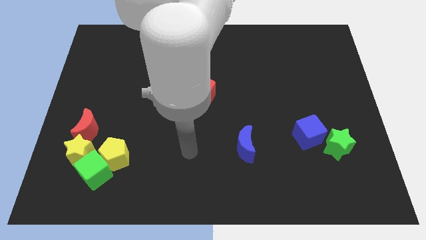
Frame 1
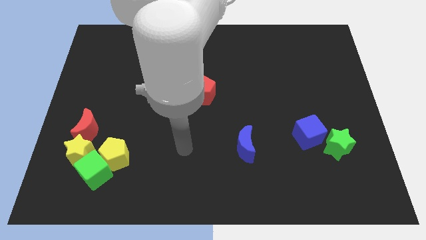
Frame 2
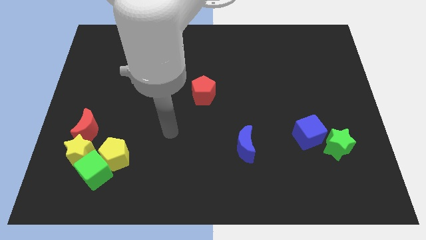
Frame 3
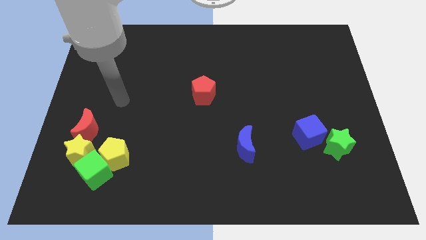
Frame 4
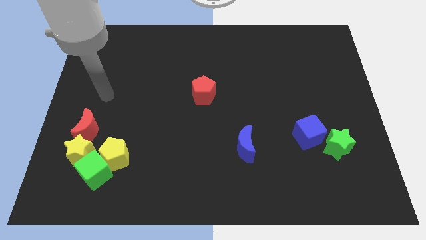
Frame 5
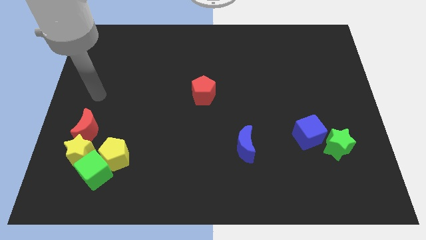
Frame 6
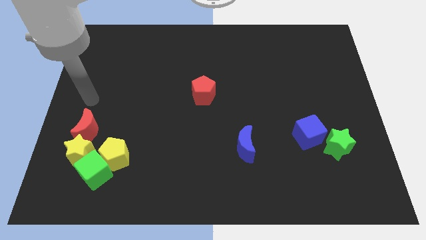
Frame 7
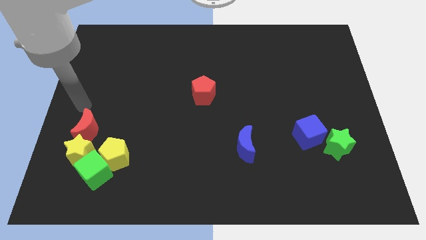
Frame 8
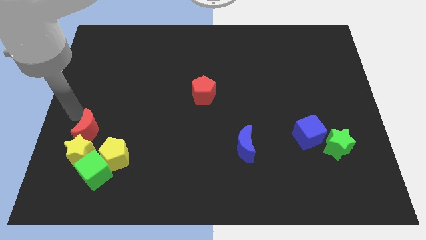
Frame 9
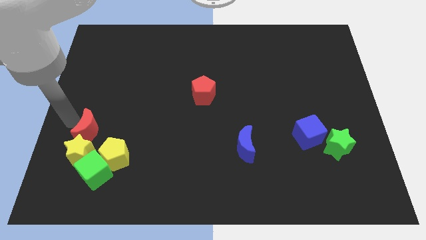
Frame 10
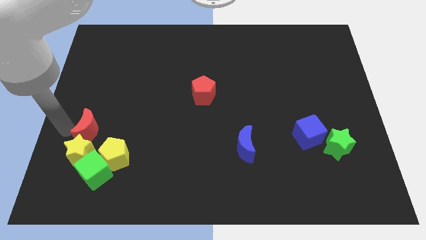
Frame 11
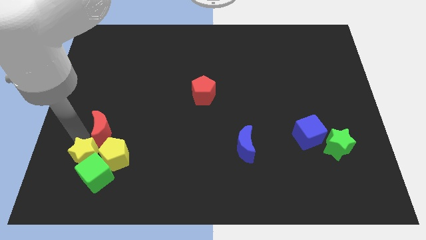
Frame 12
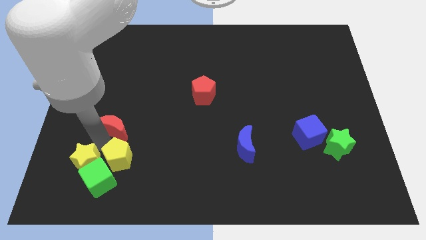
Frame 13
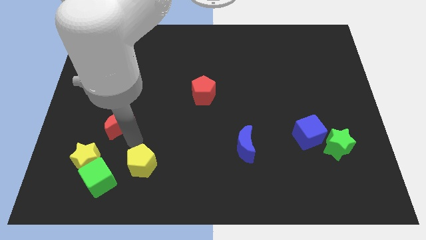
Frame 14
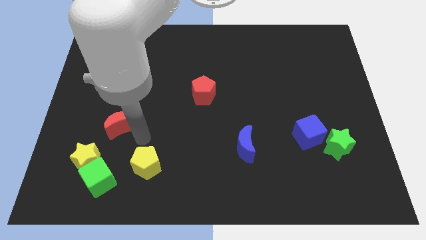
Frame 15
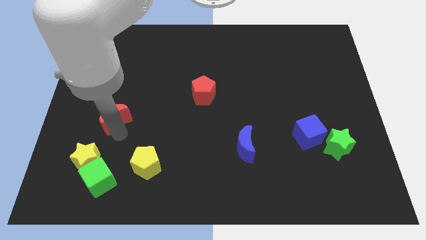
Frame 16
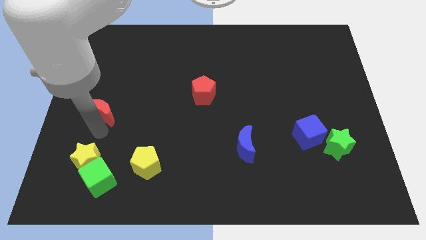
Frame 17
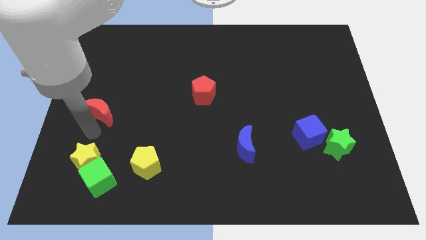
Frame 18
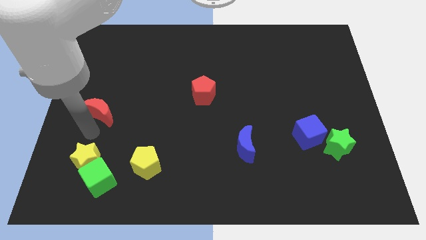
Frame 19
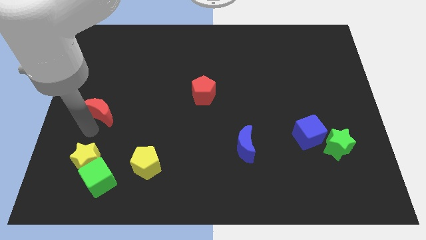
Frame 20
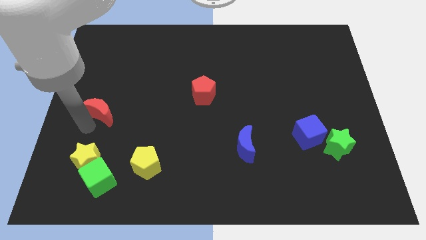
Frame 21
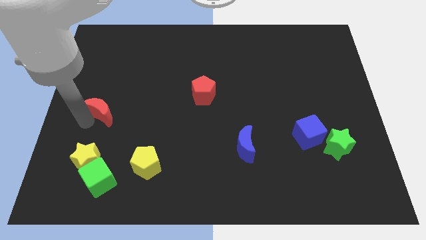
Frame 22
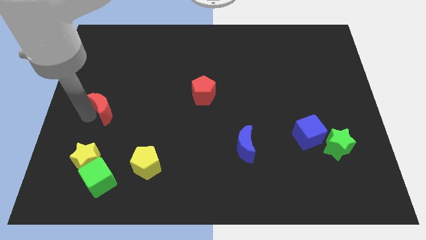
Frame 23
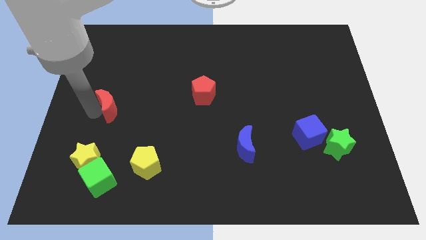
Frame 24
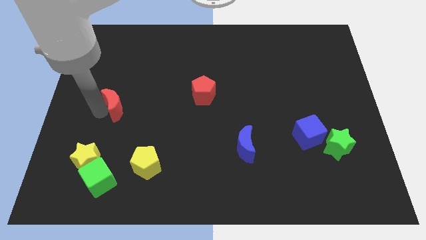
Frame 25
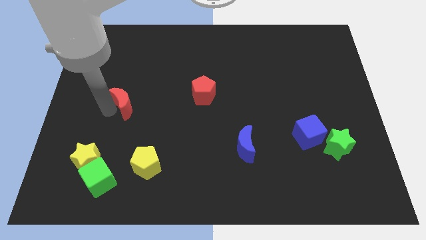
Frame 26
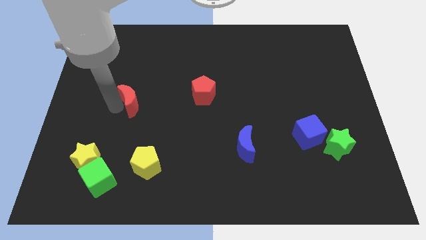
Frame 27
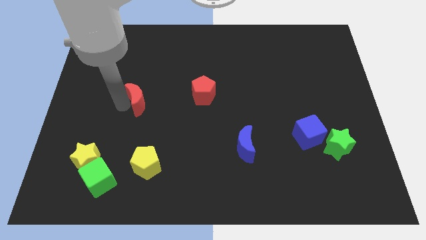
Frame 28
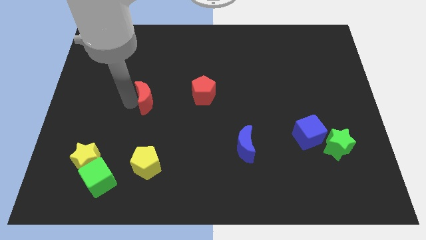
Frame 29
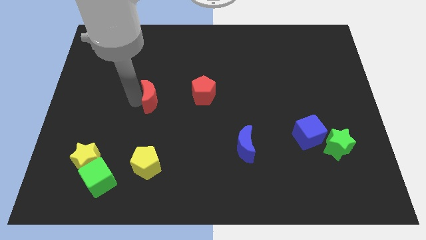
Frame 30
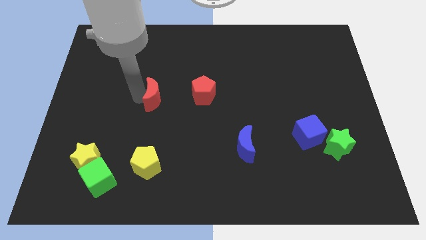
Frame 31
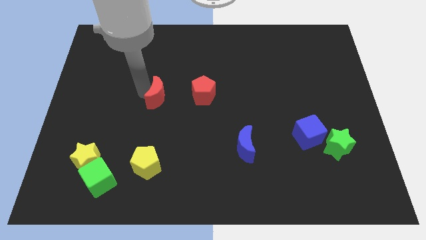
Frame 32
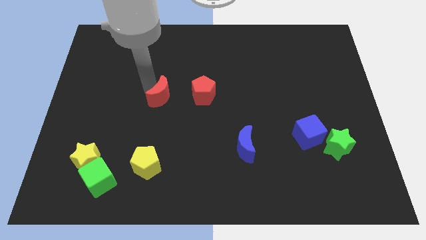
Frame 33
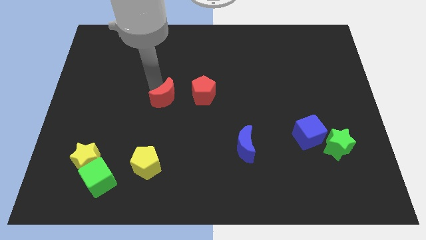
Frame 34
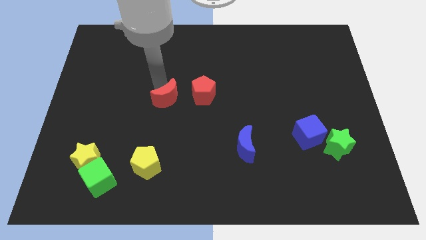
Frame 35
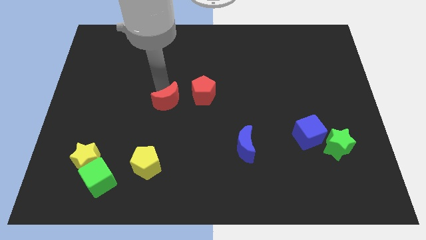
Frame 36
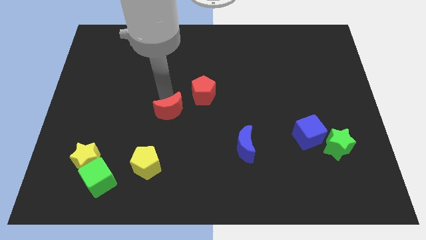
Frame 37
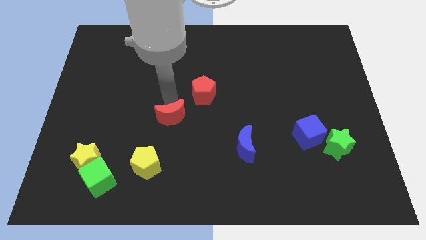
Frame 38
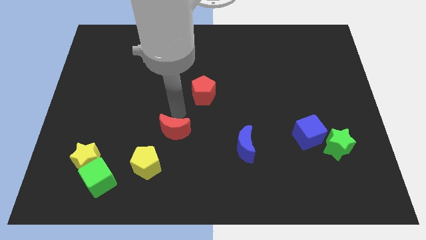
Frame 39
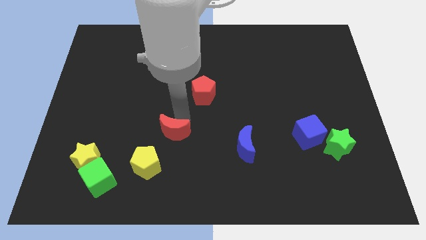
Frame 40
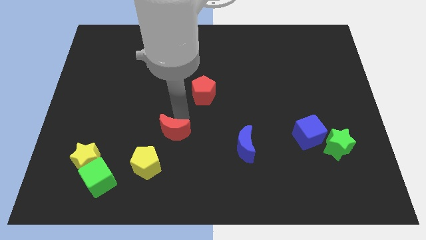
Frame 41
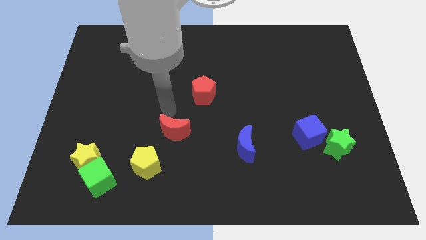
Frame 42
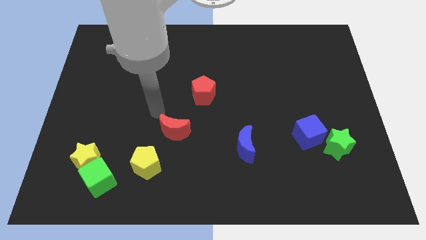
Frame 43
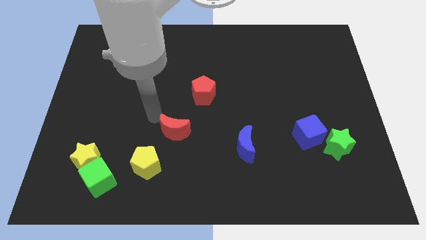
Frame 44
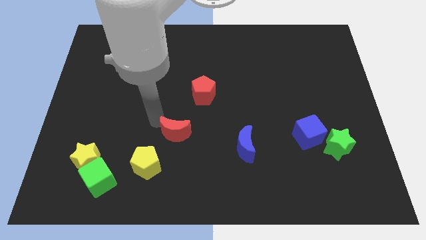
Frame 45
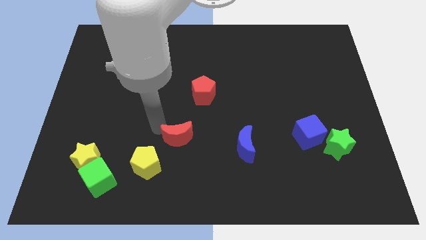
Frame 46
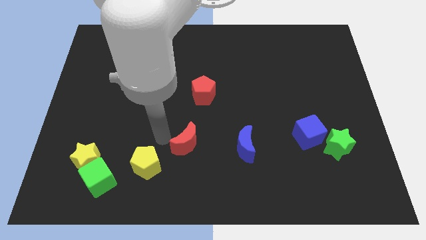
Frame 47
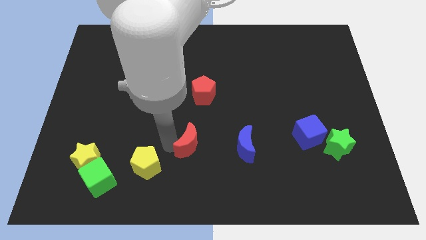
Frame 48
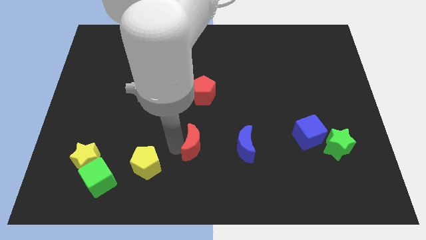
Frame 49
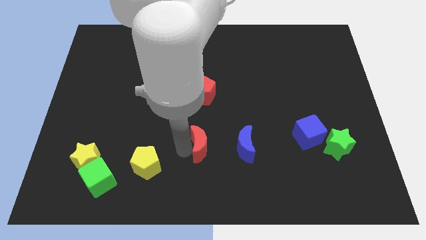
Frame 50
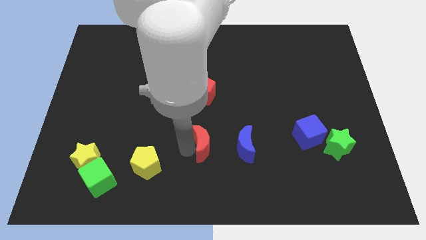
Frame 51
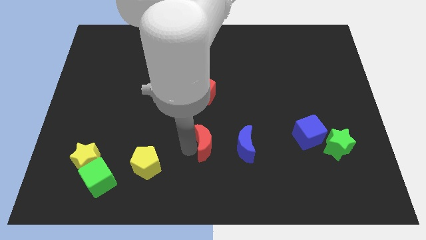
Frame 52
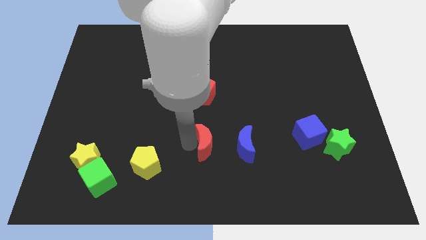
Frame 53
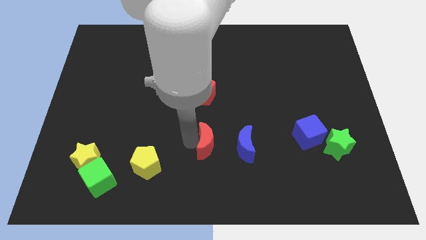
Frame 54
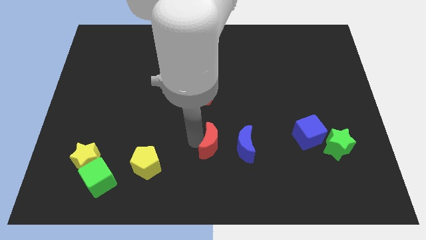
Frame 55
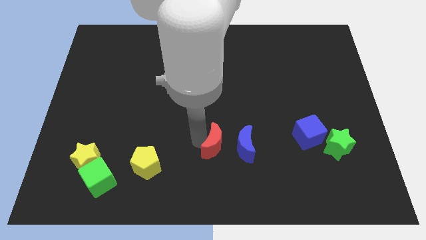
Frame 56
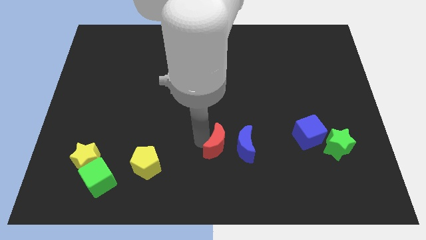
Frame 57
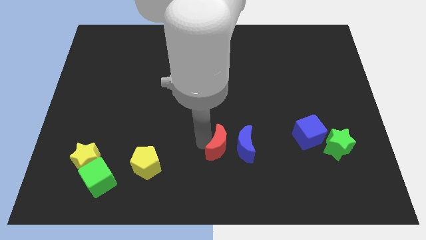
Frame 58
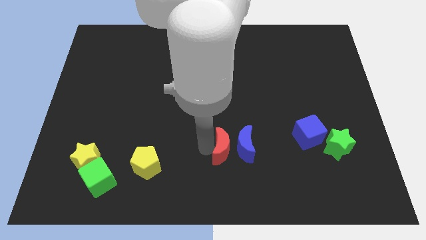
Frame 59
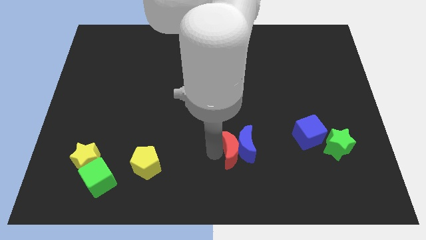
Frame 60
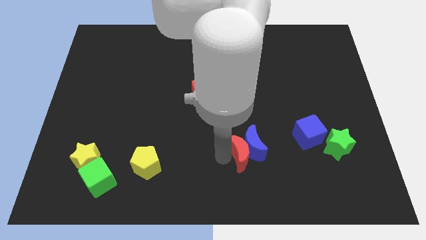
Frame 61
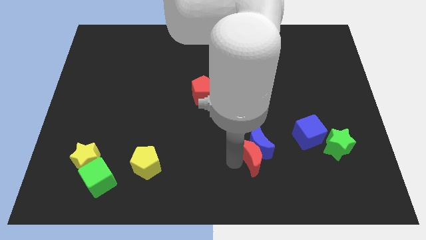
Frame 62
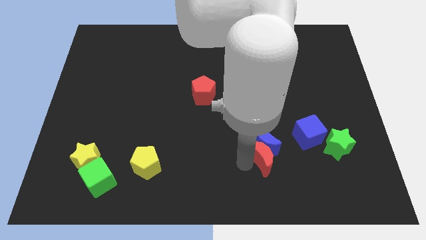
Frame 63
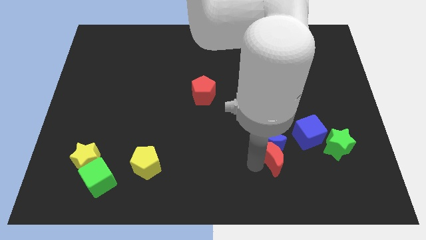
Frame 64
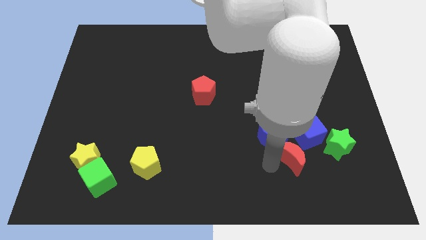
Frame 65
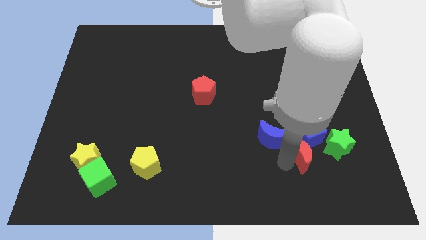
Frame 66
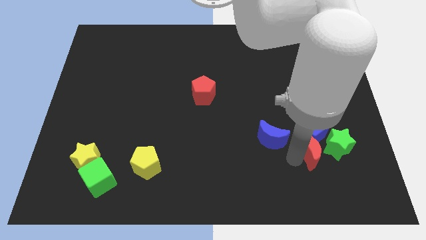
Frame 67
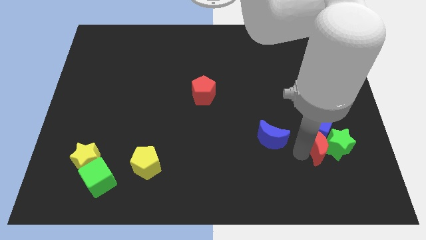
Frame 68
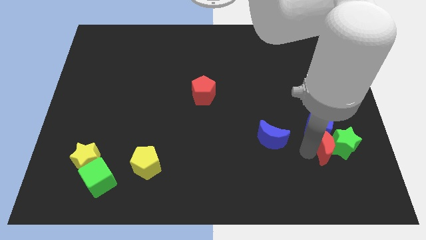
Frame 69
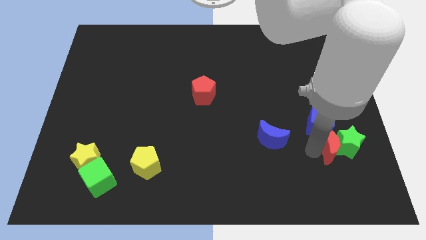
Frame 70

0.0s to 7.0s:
push the red moon close to the green star

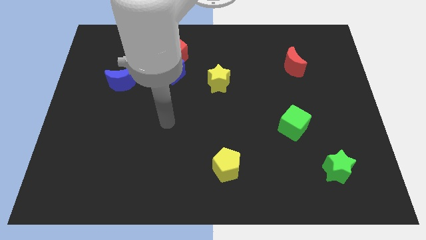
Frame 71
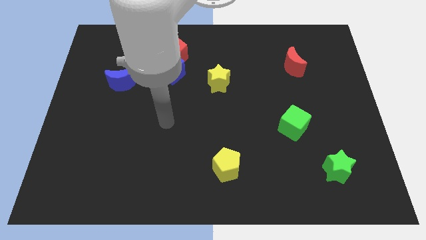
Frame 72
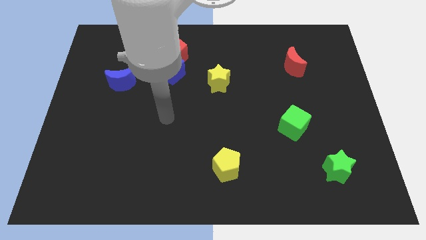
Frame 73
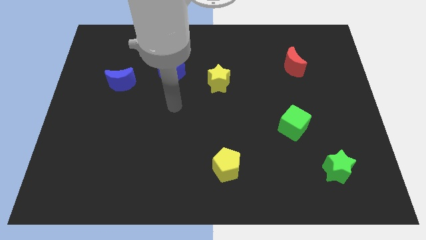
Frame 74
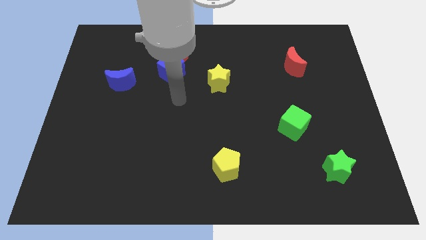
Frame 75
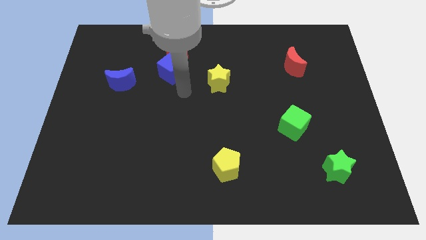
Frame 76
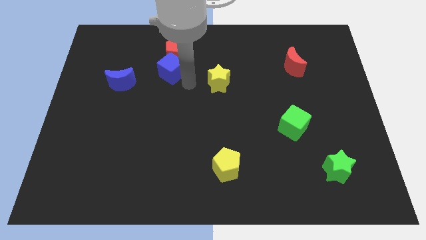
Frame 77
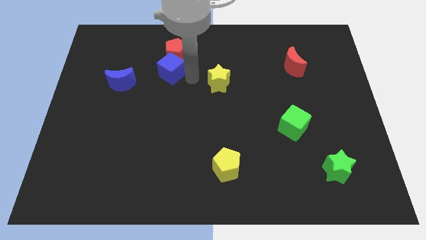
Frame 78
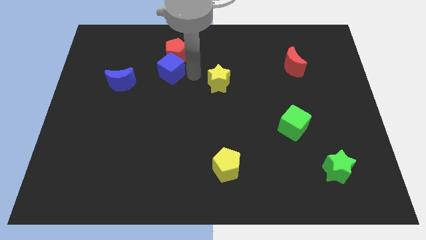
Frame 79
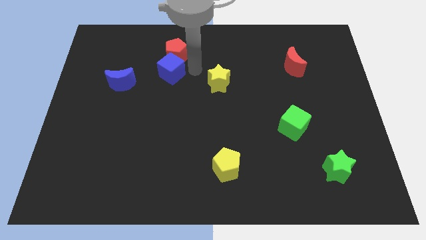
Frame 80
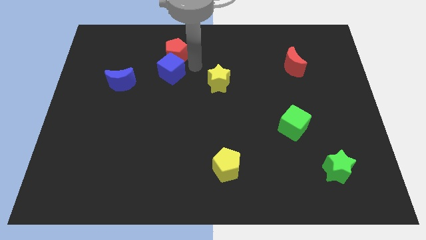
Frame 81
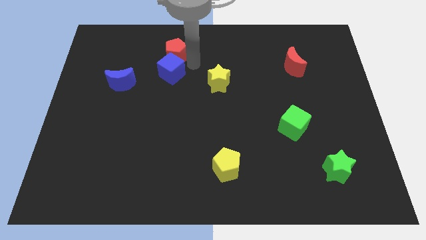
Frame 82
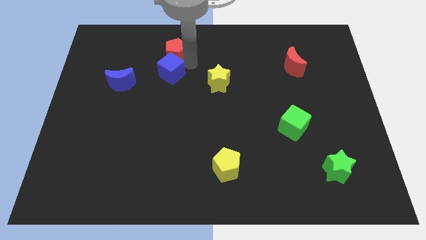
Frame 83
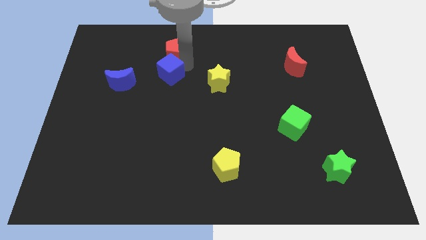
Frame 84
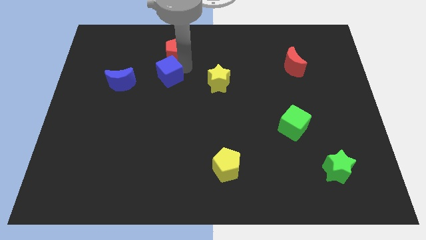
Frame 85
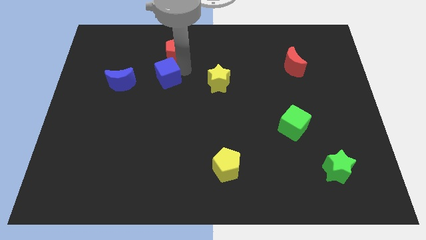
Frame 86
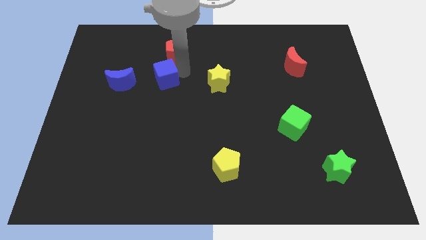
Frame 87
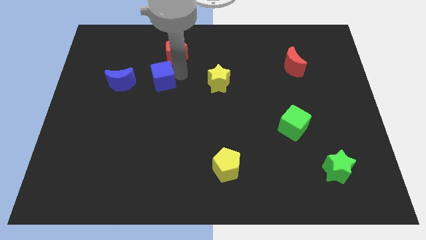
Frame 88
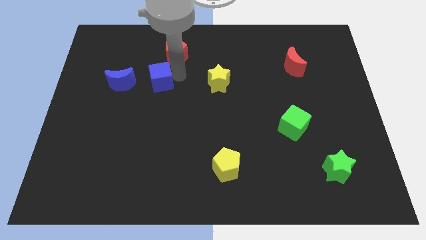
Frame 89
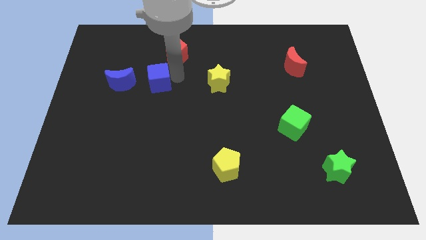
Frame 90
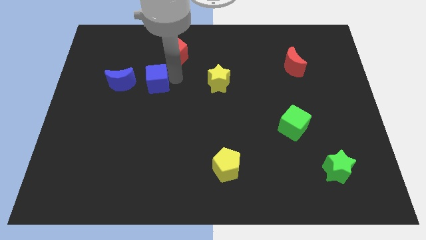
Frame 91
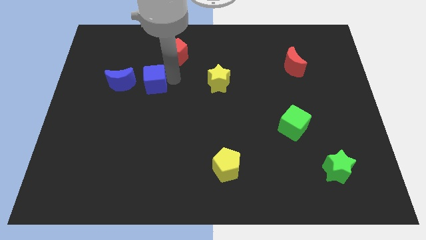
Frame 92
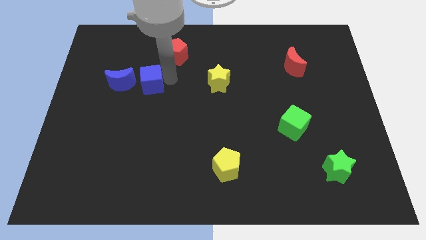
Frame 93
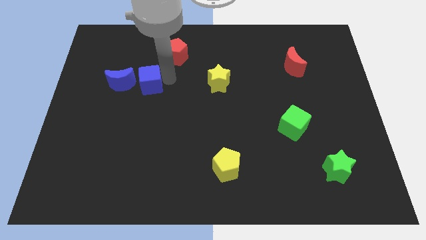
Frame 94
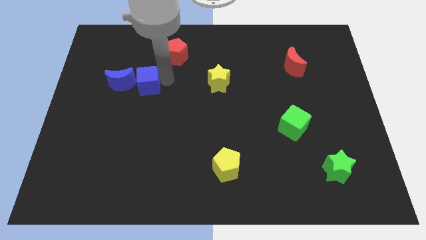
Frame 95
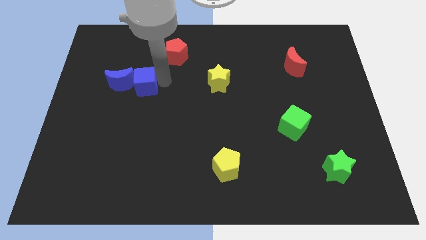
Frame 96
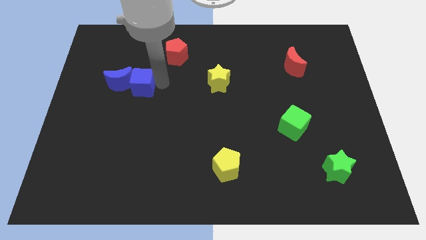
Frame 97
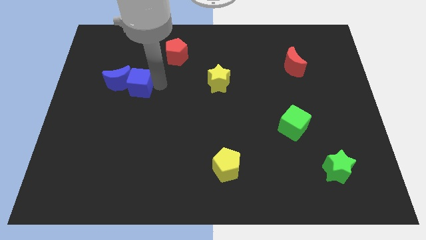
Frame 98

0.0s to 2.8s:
move the blue cube to the blue moon
